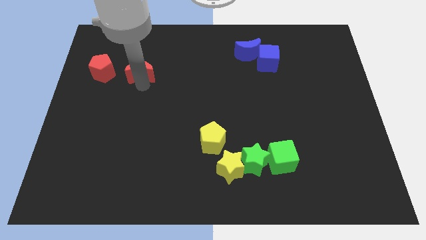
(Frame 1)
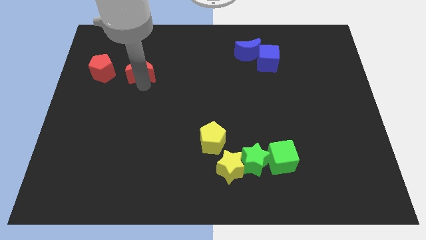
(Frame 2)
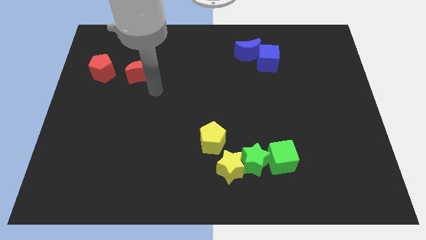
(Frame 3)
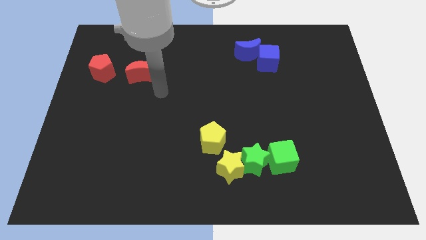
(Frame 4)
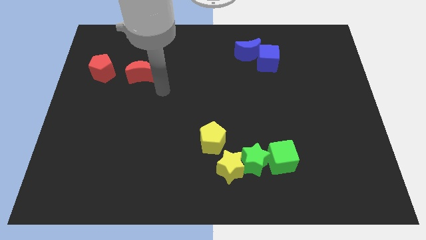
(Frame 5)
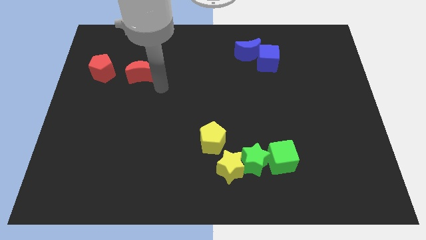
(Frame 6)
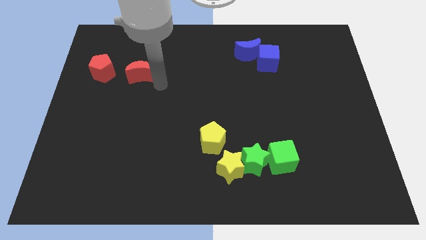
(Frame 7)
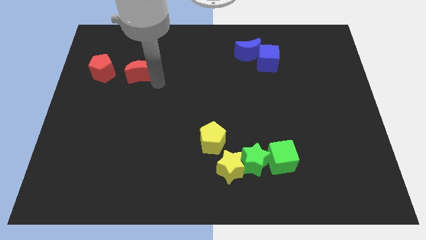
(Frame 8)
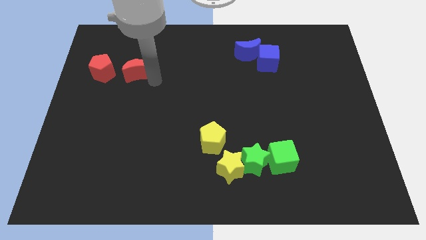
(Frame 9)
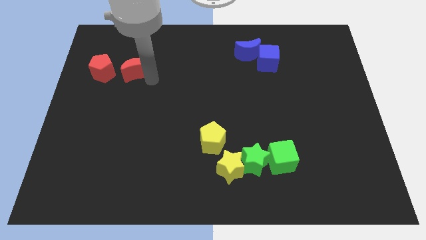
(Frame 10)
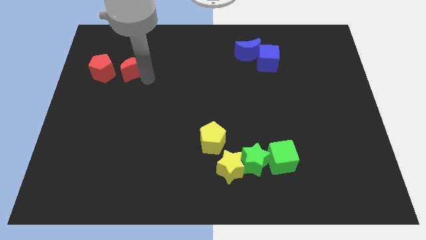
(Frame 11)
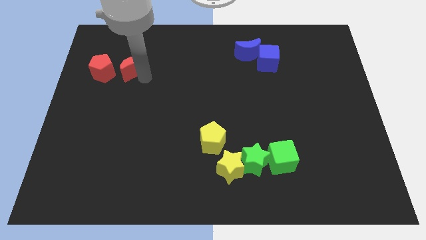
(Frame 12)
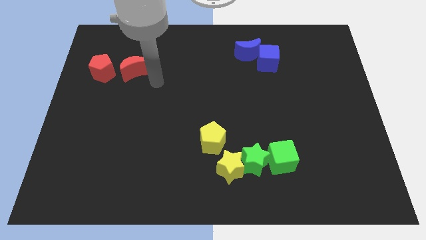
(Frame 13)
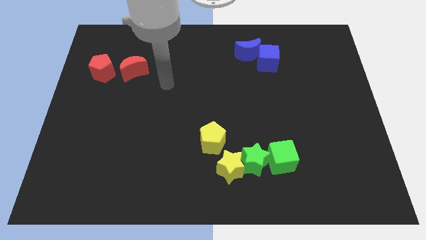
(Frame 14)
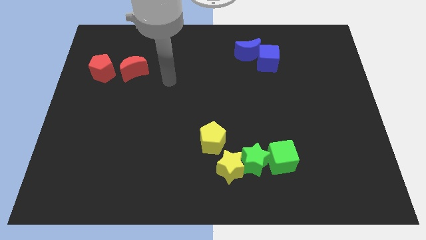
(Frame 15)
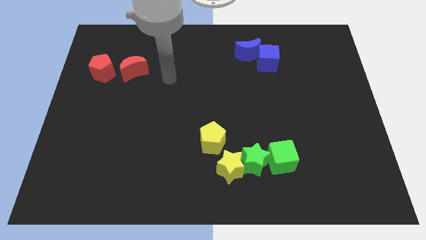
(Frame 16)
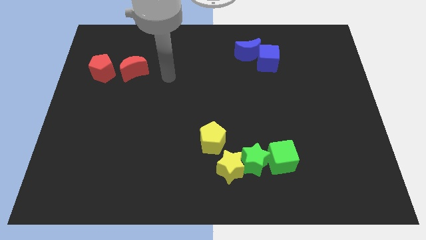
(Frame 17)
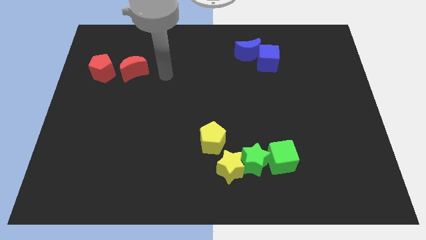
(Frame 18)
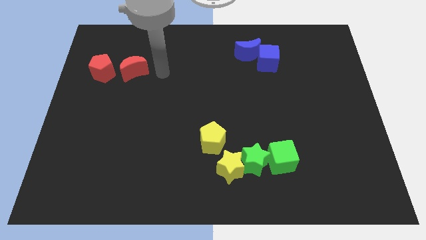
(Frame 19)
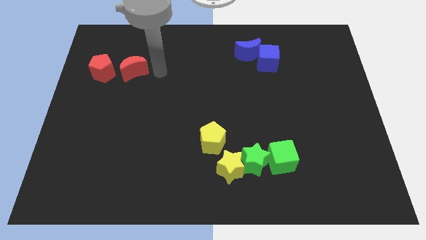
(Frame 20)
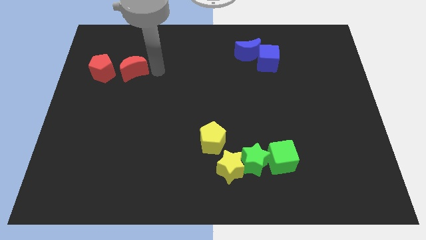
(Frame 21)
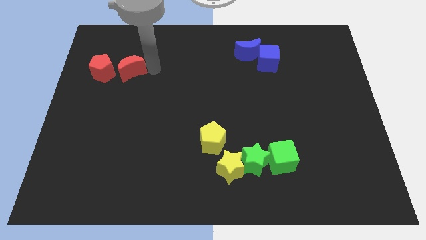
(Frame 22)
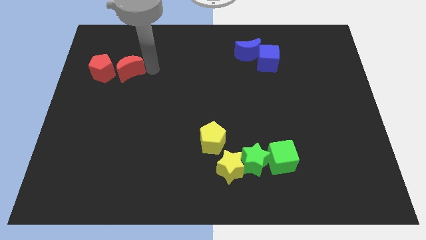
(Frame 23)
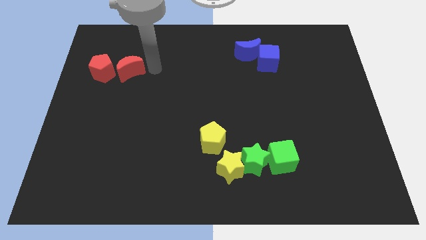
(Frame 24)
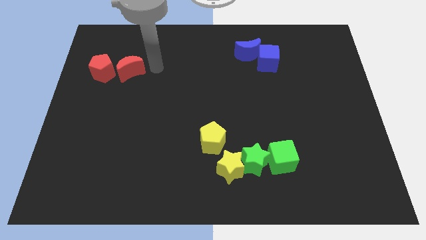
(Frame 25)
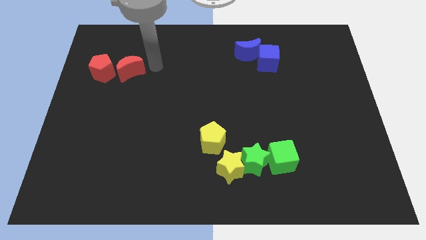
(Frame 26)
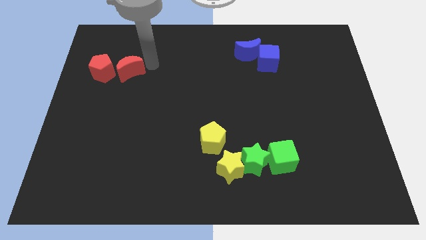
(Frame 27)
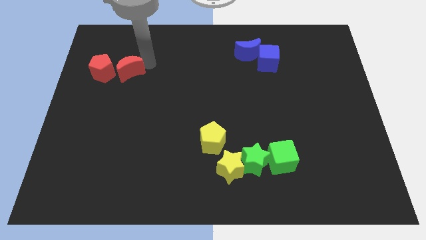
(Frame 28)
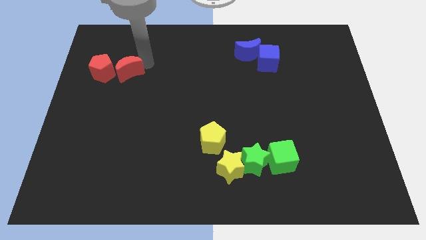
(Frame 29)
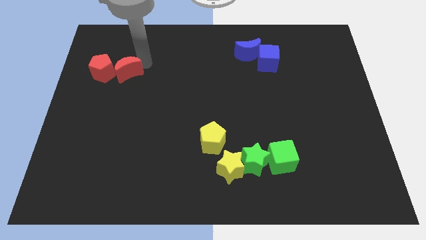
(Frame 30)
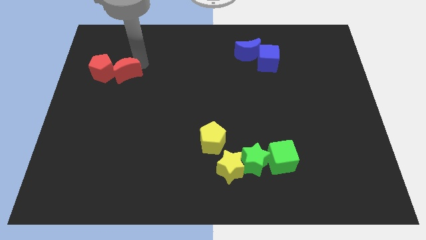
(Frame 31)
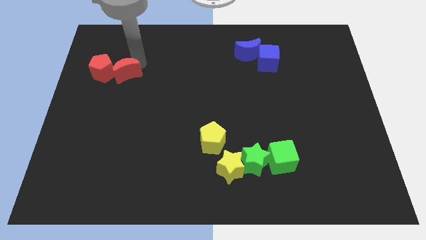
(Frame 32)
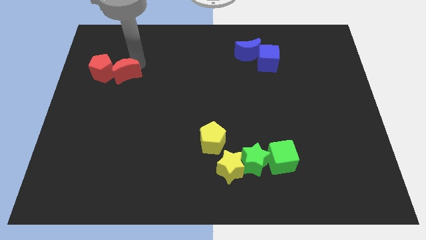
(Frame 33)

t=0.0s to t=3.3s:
slide the red moon close to the right side of the red pentagon

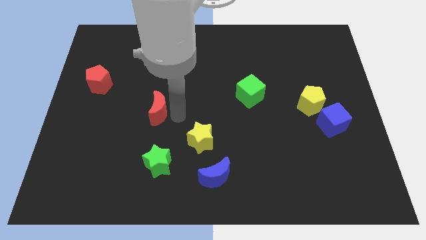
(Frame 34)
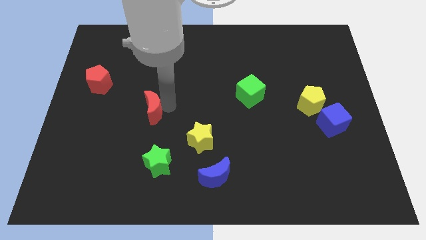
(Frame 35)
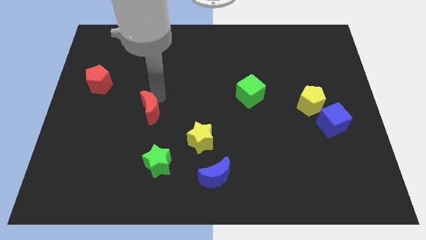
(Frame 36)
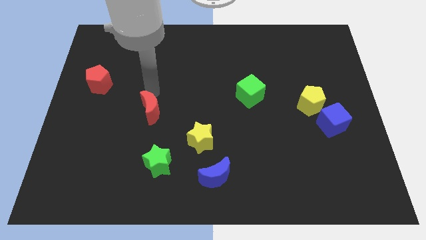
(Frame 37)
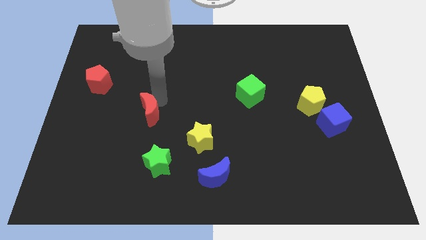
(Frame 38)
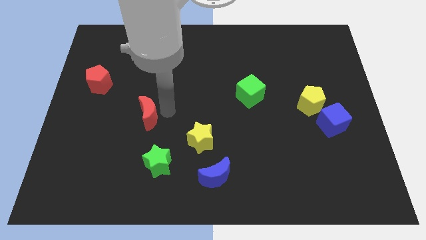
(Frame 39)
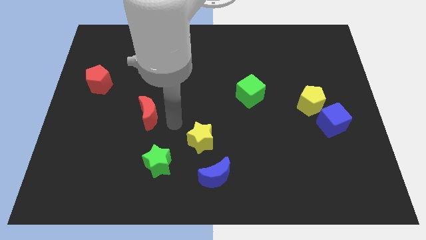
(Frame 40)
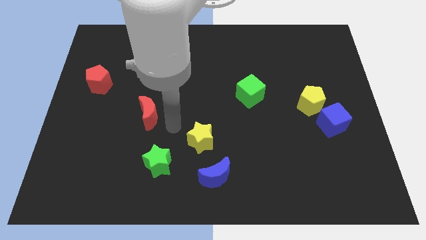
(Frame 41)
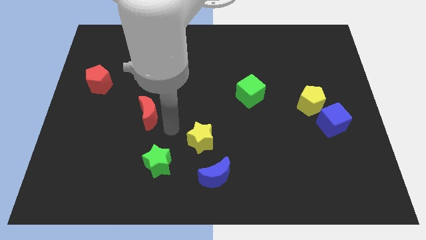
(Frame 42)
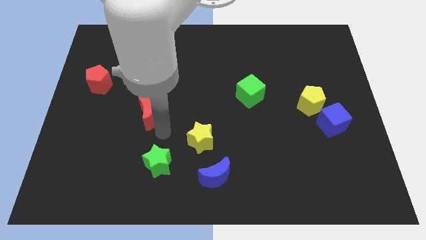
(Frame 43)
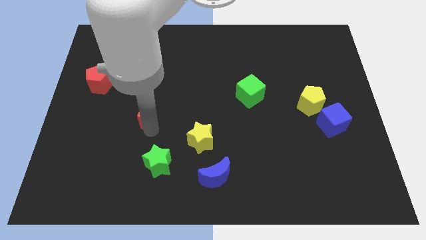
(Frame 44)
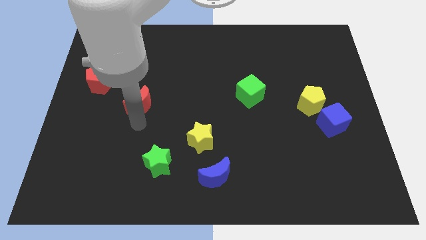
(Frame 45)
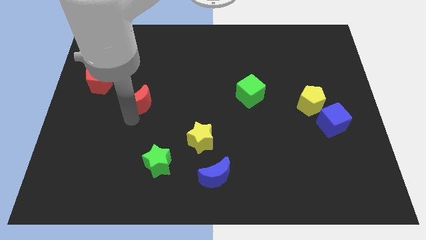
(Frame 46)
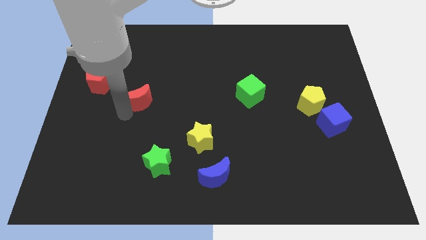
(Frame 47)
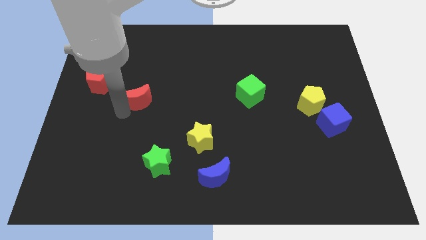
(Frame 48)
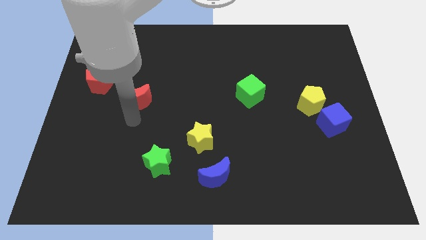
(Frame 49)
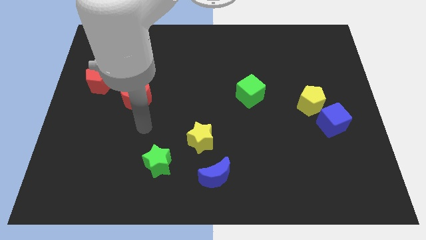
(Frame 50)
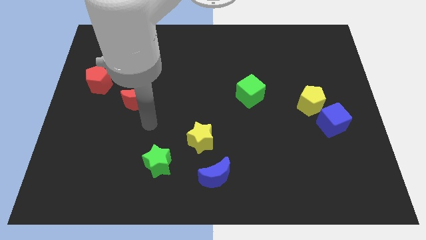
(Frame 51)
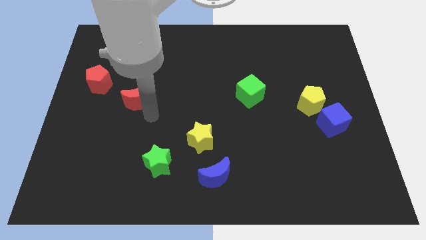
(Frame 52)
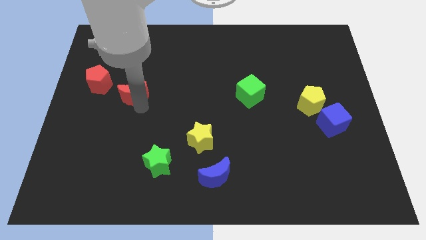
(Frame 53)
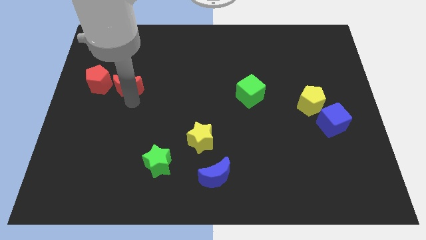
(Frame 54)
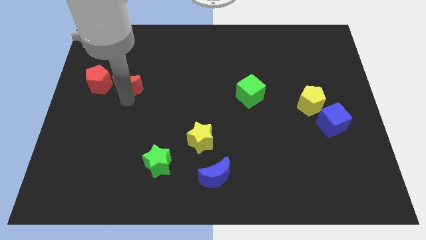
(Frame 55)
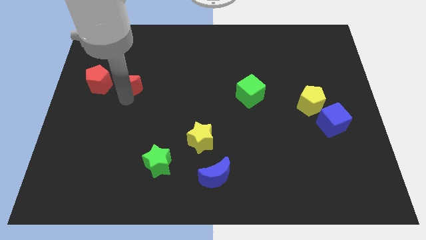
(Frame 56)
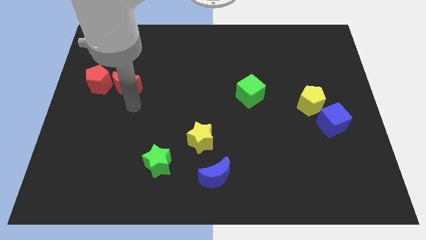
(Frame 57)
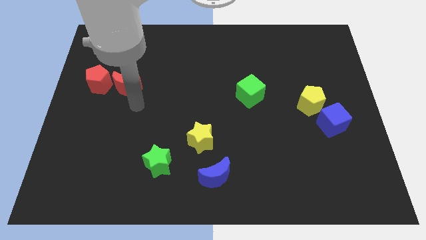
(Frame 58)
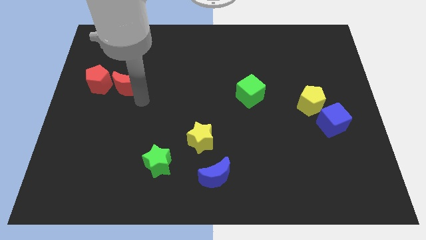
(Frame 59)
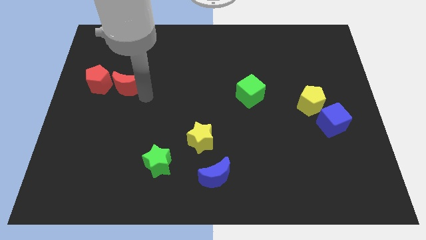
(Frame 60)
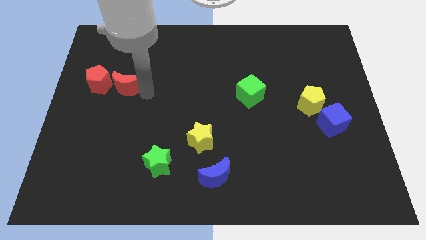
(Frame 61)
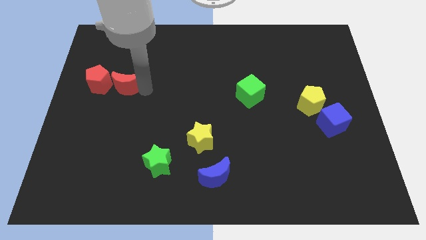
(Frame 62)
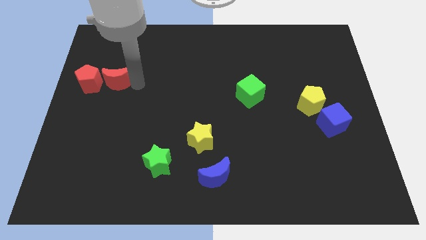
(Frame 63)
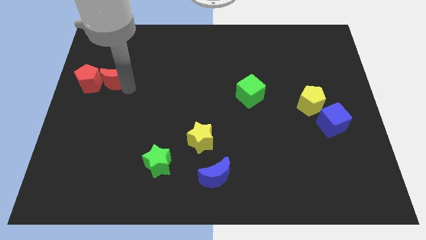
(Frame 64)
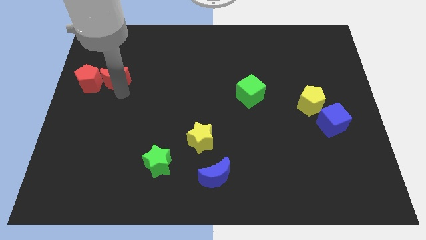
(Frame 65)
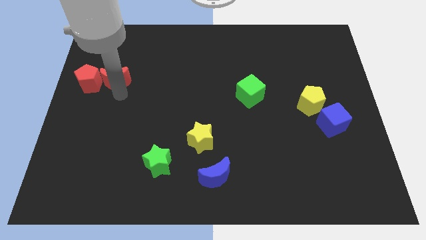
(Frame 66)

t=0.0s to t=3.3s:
push the red moon into the red pentagon

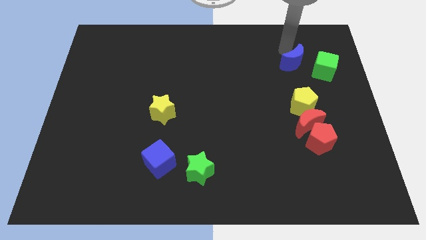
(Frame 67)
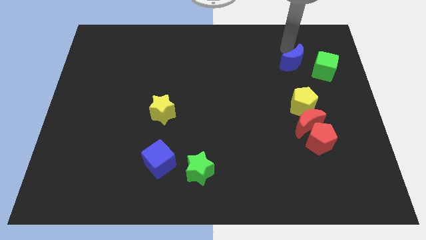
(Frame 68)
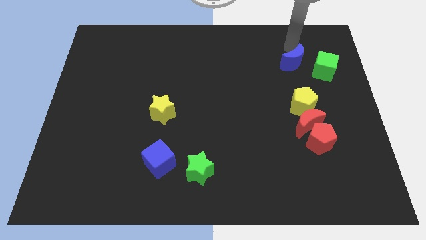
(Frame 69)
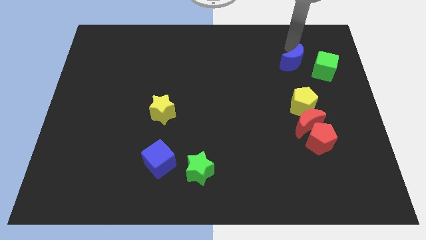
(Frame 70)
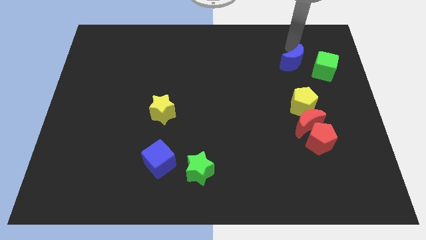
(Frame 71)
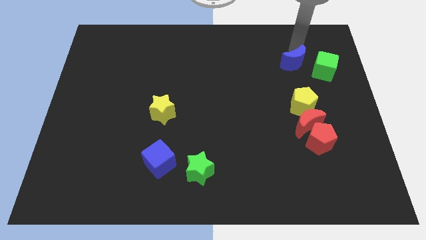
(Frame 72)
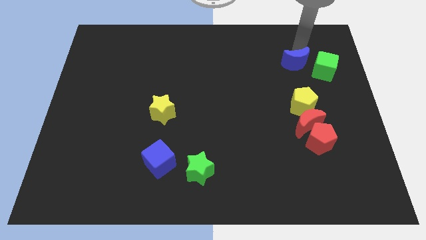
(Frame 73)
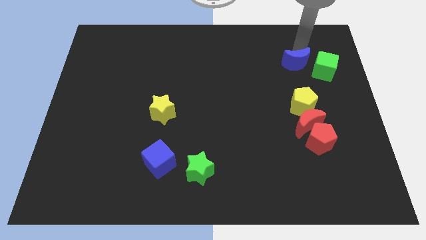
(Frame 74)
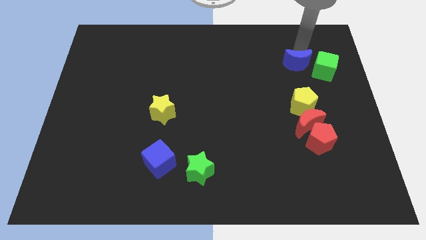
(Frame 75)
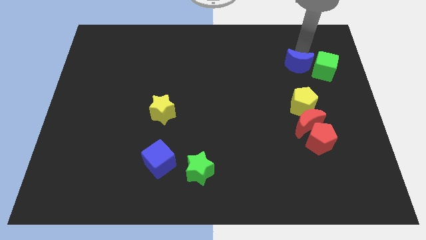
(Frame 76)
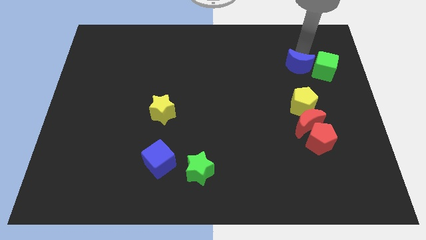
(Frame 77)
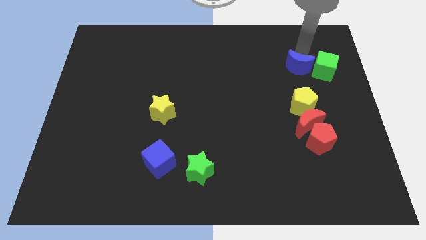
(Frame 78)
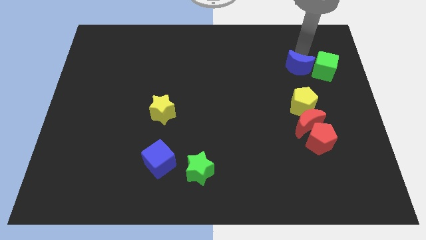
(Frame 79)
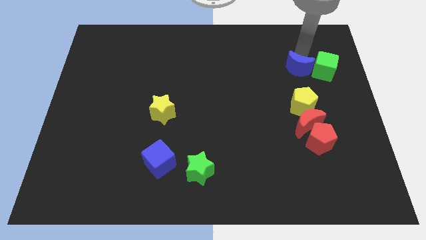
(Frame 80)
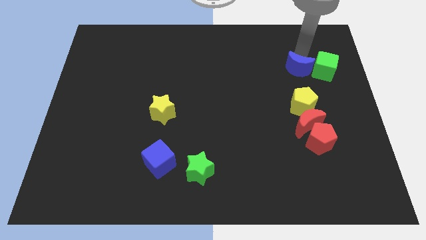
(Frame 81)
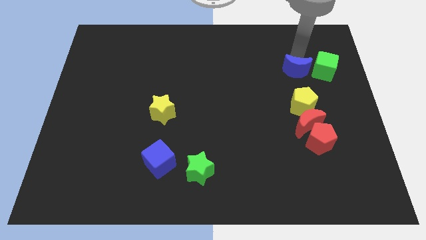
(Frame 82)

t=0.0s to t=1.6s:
place the blue crescent to the left of the green cube

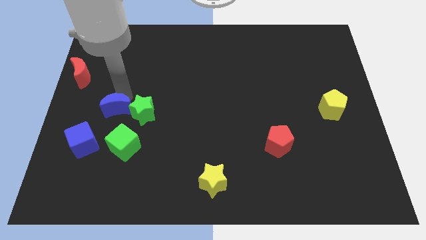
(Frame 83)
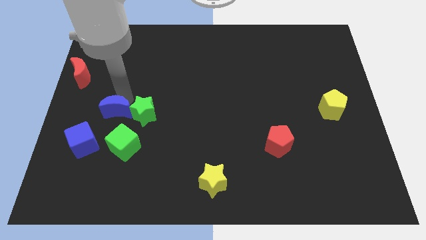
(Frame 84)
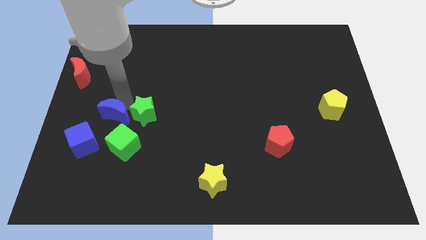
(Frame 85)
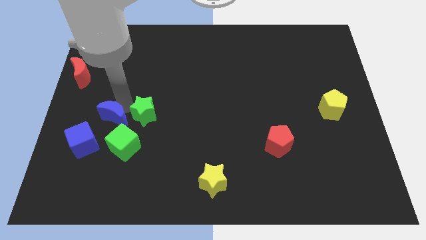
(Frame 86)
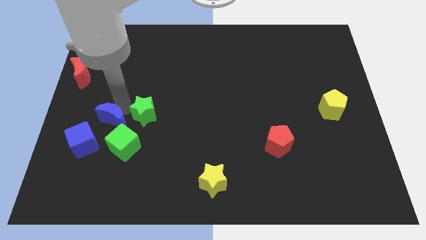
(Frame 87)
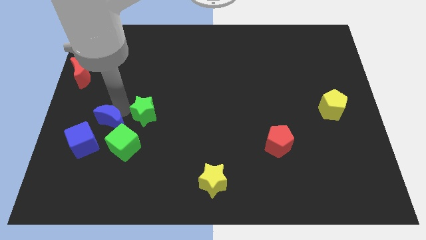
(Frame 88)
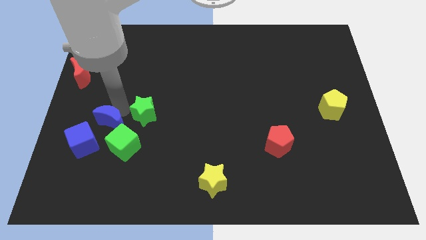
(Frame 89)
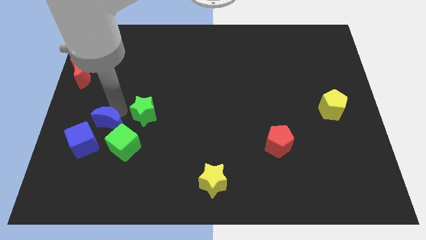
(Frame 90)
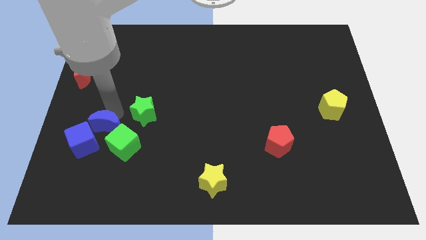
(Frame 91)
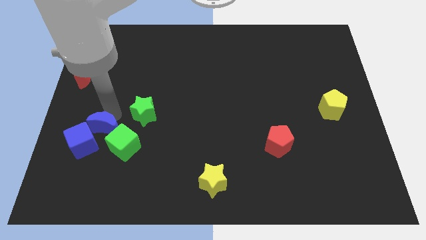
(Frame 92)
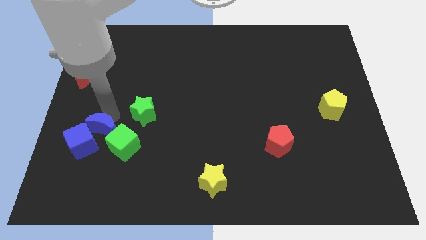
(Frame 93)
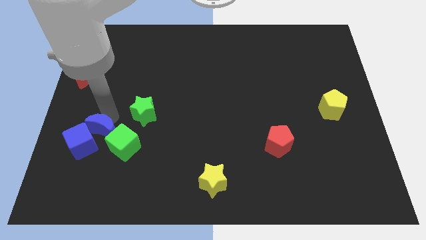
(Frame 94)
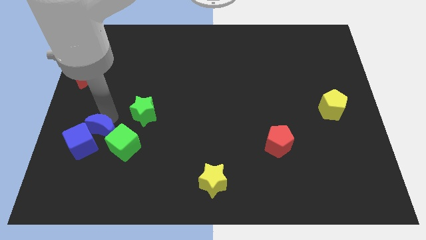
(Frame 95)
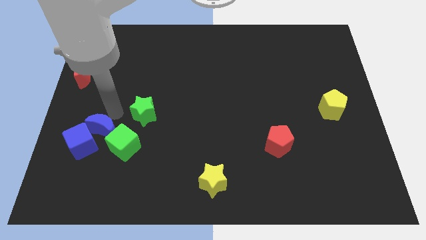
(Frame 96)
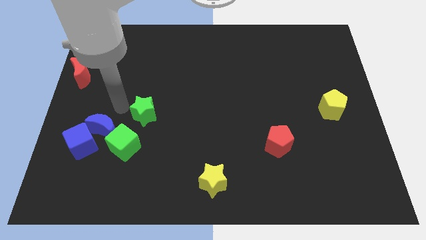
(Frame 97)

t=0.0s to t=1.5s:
push the blue crescent into the blue cube towards the bottom left of the board
